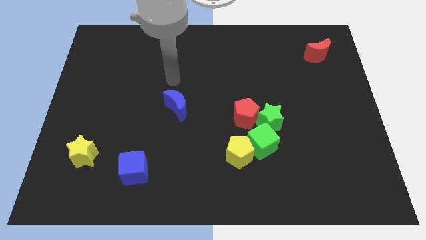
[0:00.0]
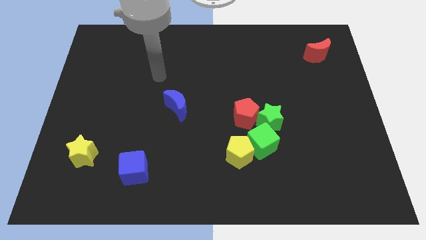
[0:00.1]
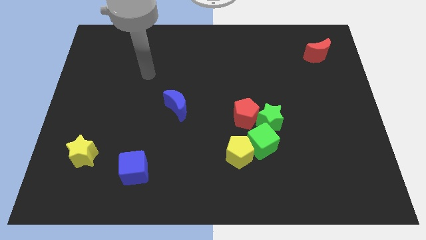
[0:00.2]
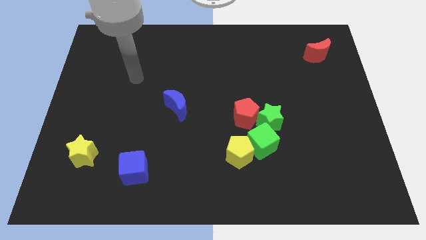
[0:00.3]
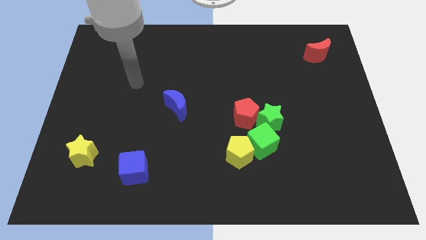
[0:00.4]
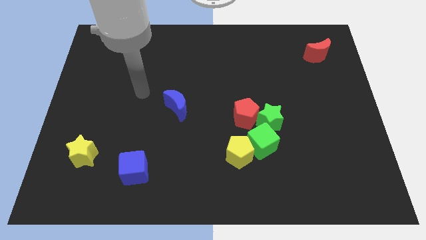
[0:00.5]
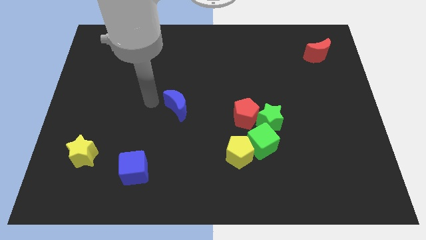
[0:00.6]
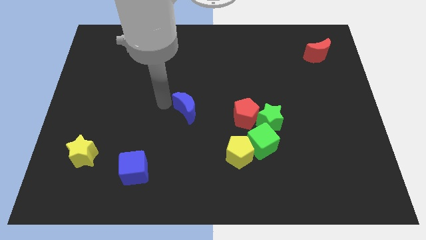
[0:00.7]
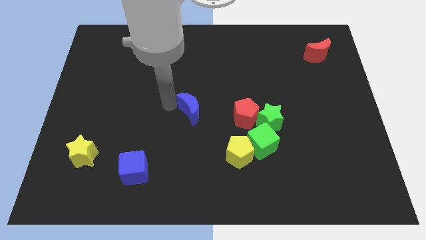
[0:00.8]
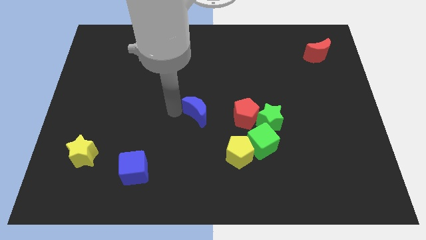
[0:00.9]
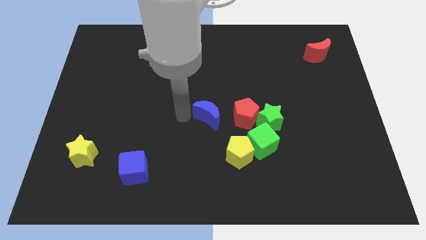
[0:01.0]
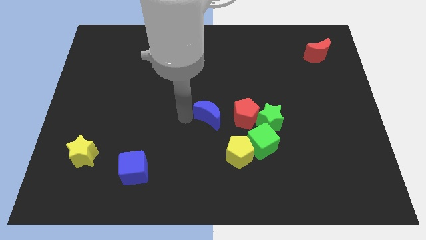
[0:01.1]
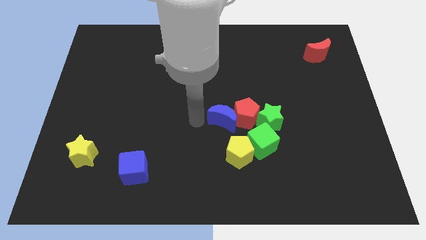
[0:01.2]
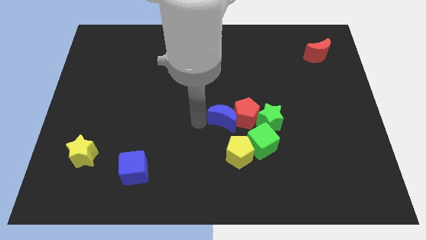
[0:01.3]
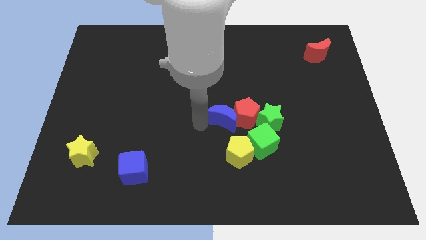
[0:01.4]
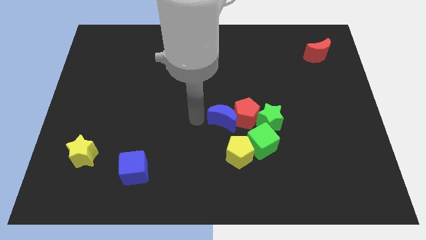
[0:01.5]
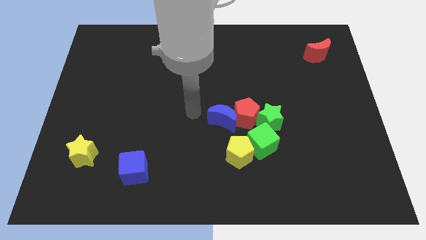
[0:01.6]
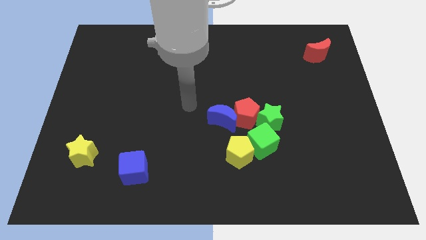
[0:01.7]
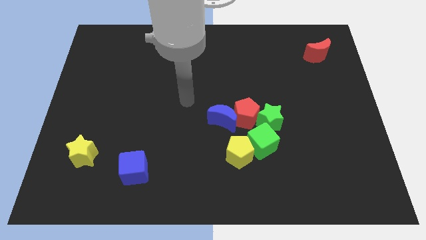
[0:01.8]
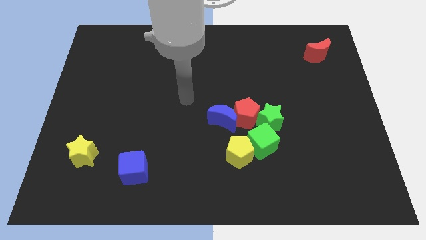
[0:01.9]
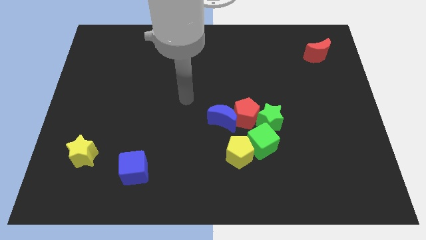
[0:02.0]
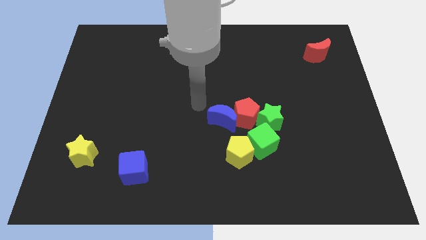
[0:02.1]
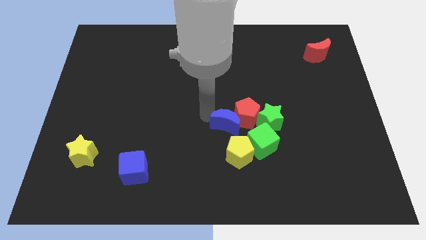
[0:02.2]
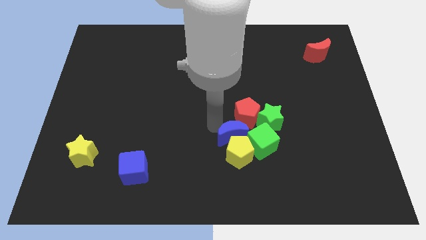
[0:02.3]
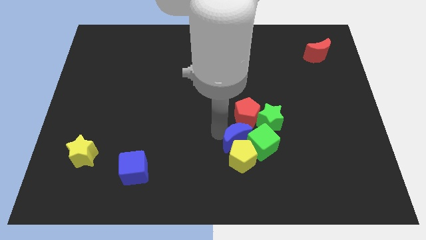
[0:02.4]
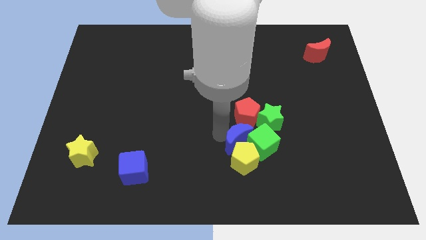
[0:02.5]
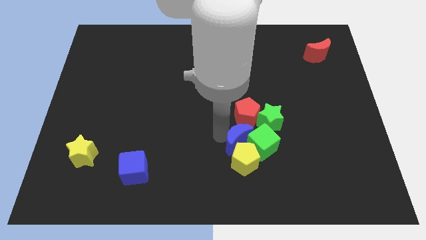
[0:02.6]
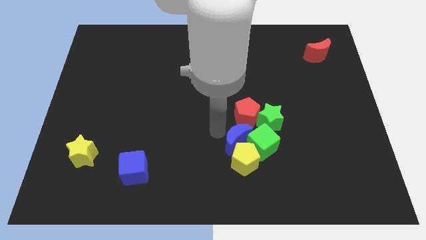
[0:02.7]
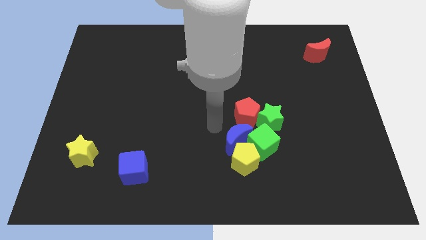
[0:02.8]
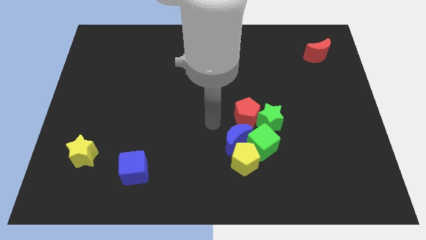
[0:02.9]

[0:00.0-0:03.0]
push the blue moon into the group of blocks

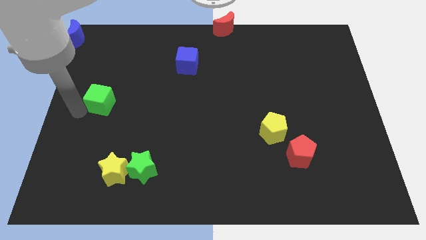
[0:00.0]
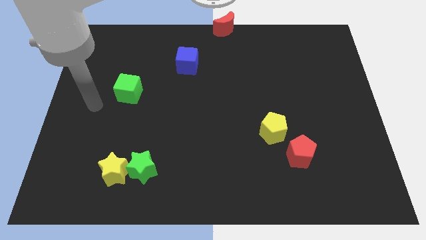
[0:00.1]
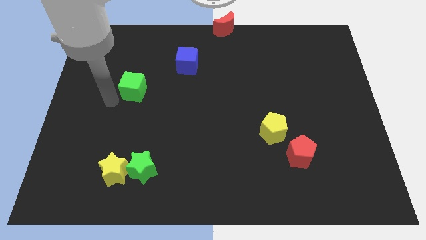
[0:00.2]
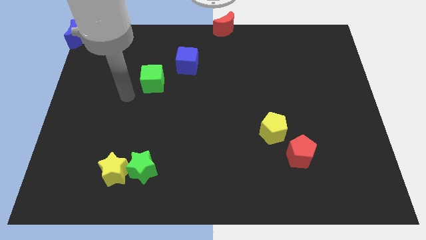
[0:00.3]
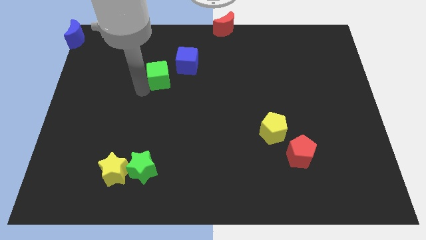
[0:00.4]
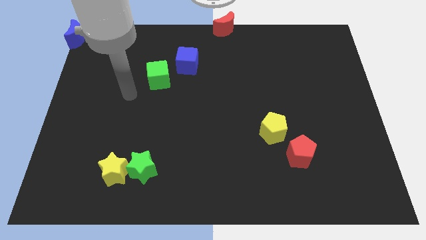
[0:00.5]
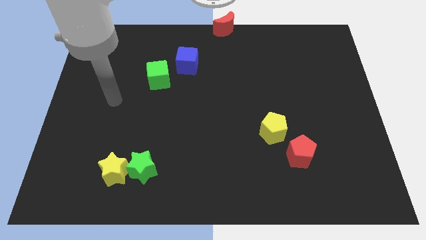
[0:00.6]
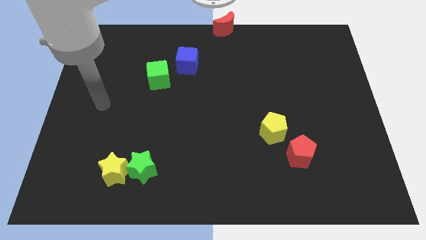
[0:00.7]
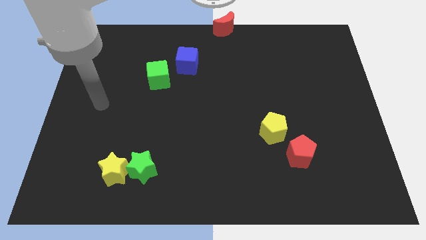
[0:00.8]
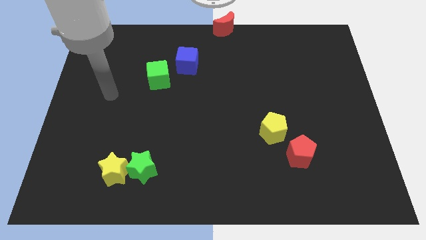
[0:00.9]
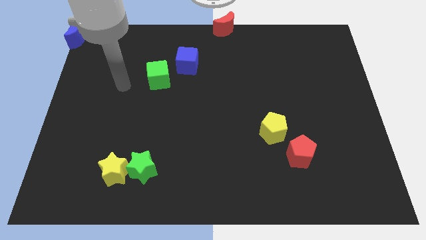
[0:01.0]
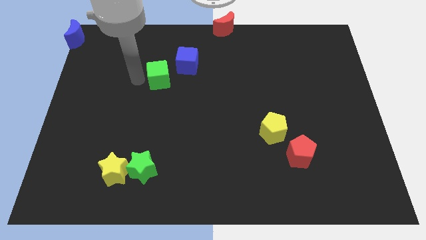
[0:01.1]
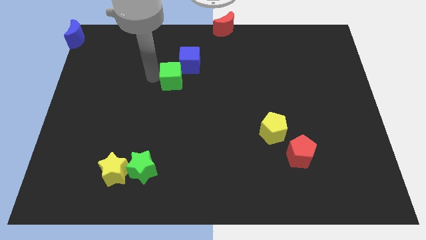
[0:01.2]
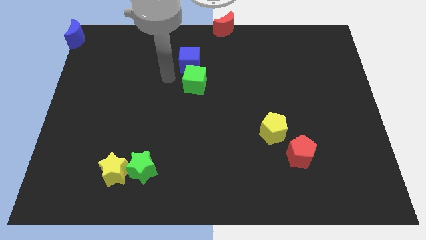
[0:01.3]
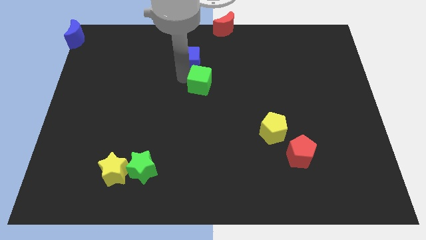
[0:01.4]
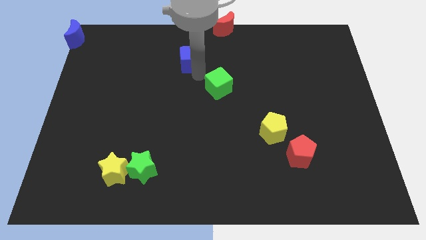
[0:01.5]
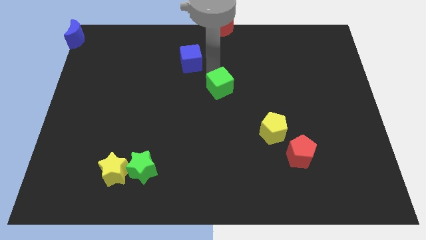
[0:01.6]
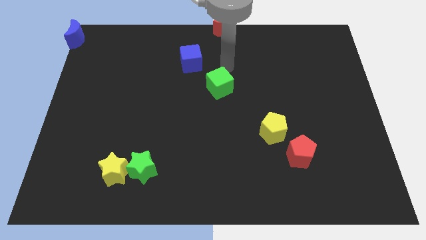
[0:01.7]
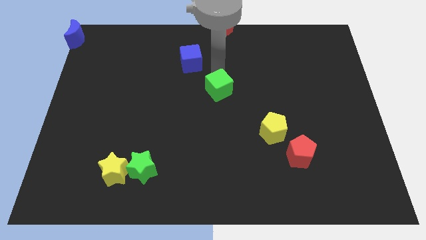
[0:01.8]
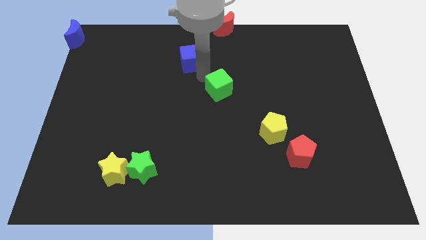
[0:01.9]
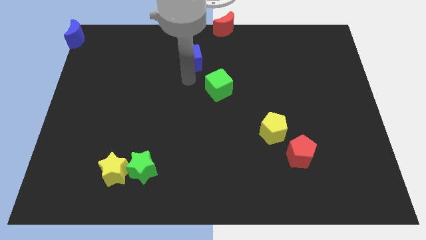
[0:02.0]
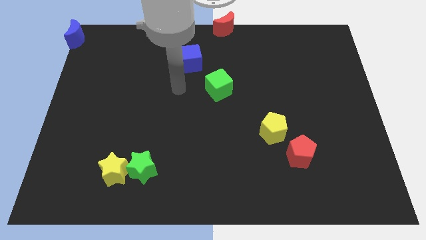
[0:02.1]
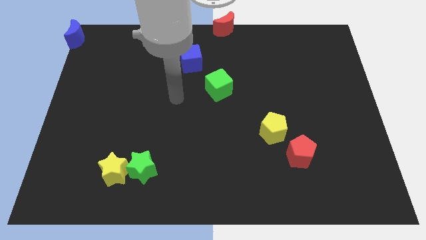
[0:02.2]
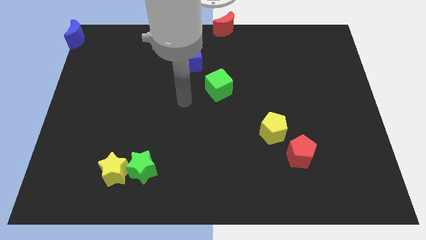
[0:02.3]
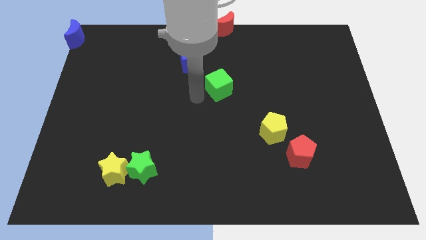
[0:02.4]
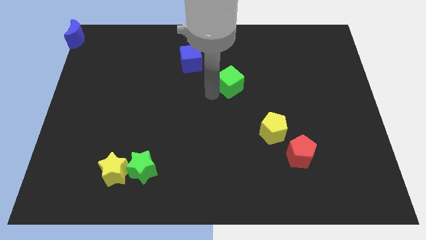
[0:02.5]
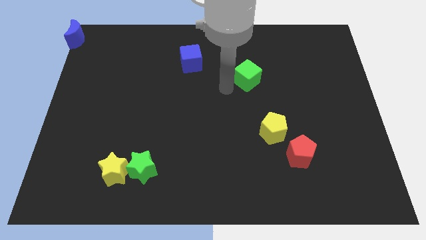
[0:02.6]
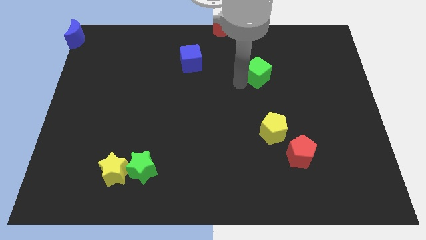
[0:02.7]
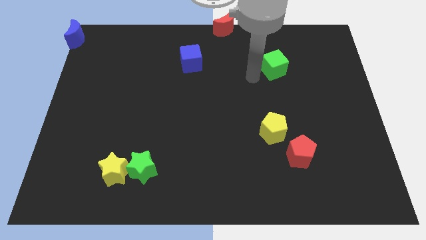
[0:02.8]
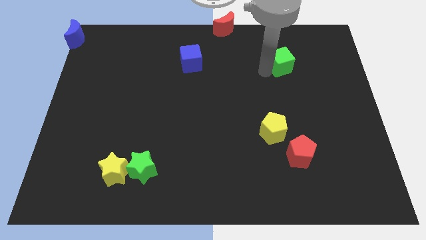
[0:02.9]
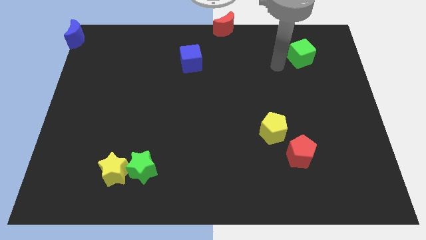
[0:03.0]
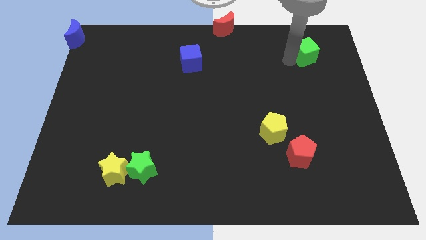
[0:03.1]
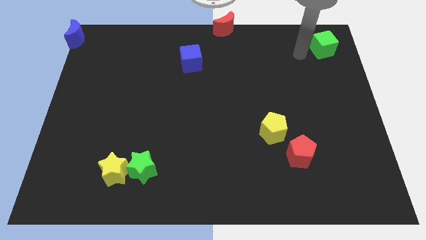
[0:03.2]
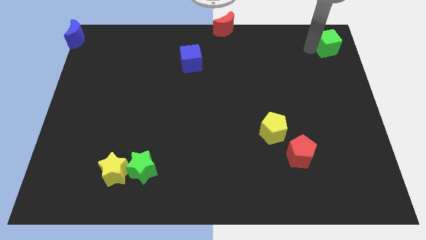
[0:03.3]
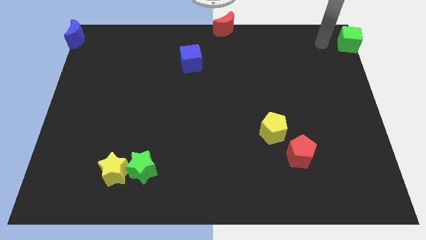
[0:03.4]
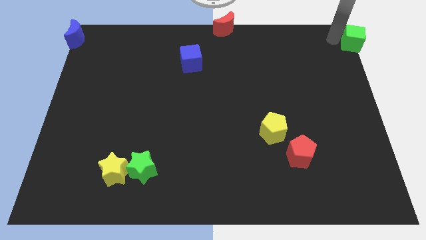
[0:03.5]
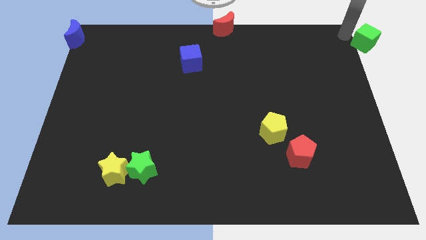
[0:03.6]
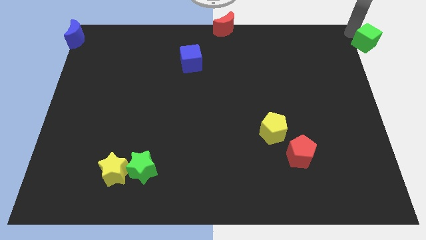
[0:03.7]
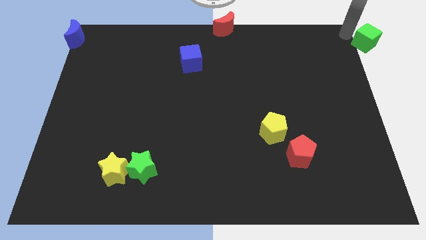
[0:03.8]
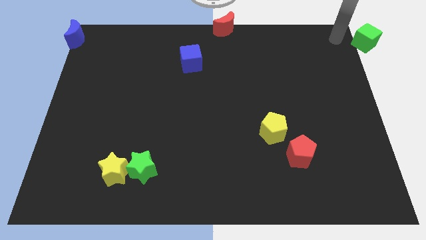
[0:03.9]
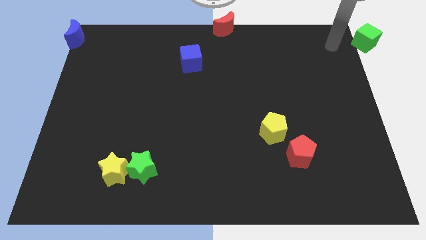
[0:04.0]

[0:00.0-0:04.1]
move the green cube to the top right of the board

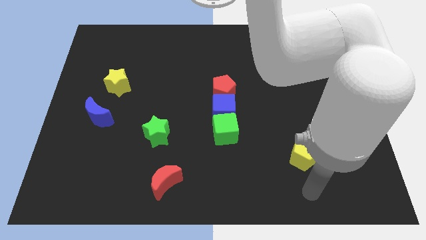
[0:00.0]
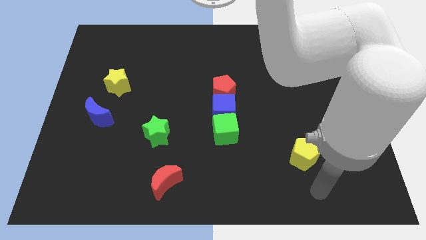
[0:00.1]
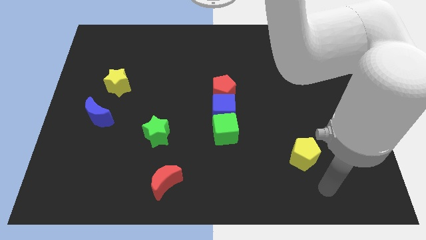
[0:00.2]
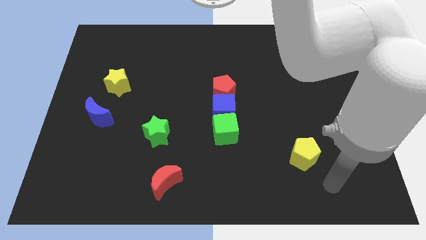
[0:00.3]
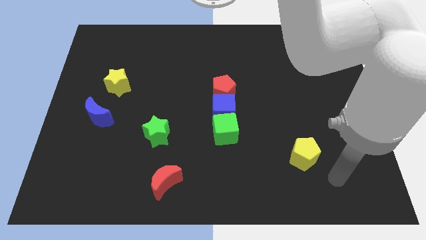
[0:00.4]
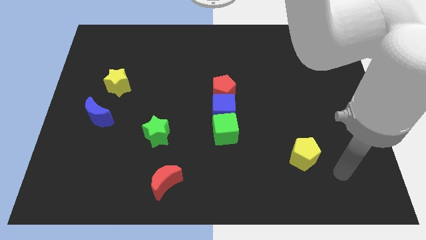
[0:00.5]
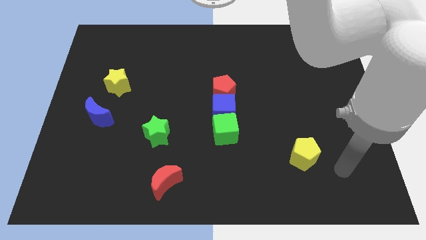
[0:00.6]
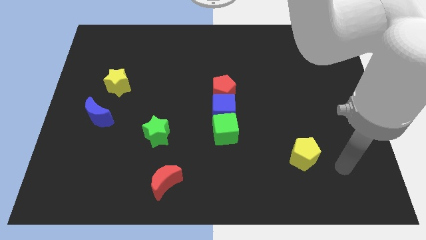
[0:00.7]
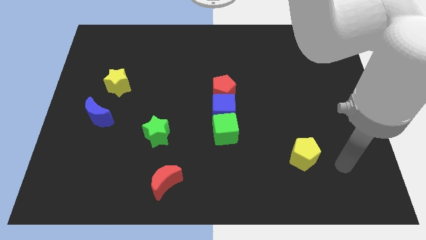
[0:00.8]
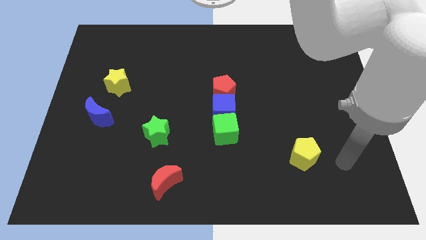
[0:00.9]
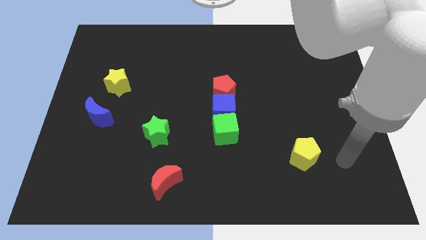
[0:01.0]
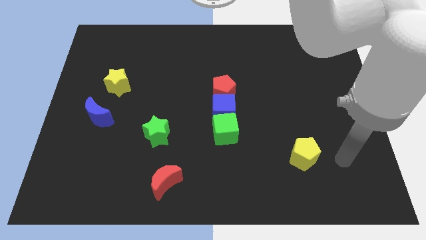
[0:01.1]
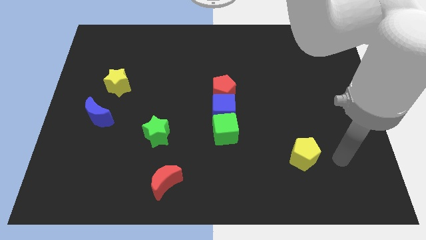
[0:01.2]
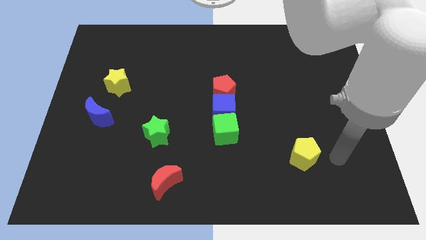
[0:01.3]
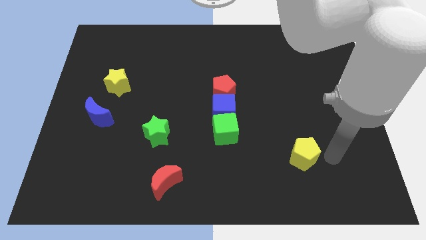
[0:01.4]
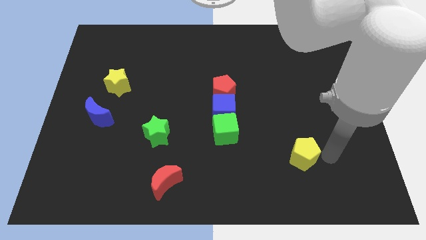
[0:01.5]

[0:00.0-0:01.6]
place your hand at the right side of the yellow pentagon

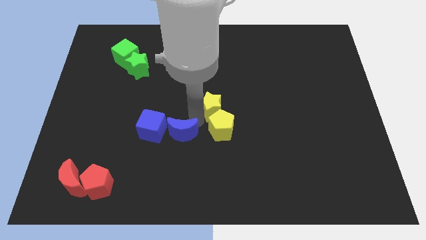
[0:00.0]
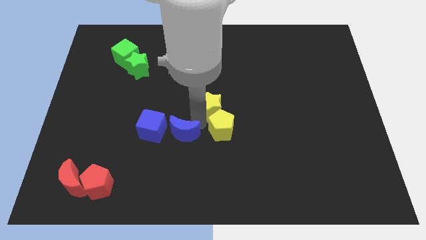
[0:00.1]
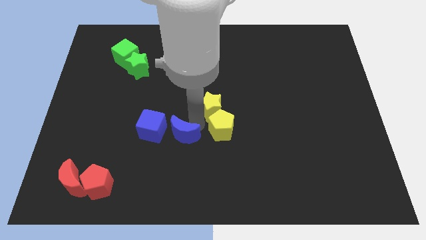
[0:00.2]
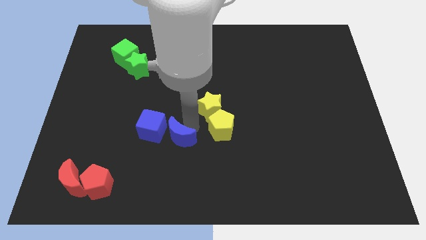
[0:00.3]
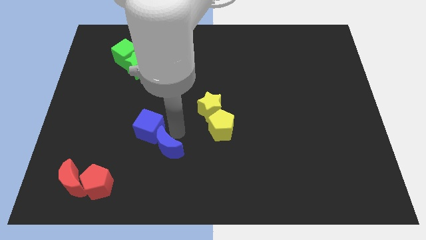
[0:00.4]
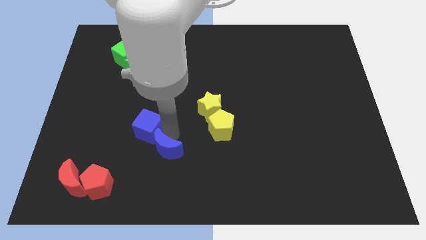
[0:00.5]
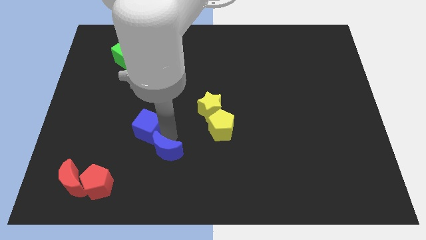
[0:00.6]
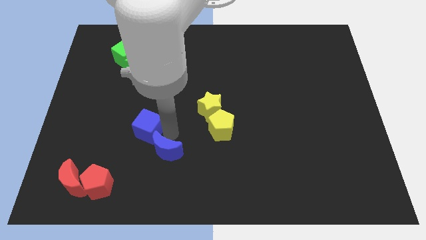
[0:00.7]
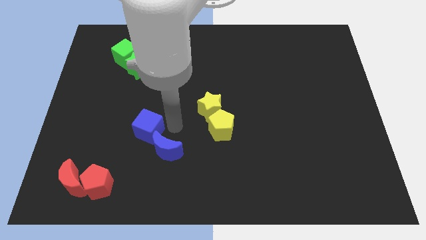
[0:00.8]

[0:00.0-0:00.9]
push the blue crescent bottom right to the blue cube
